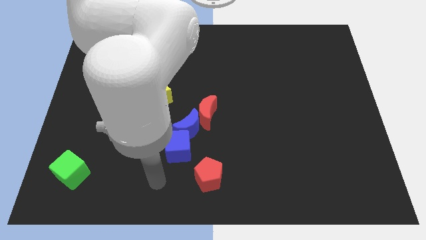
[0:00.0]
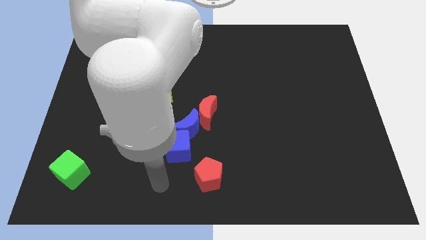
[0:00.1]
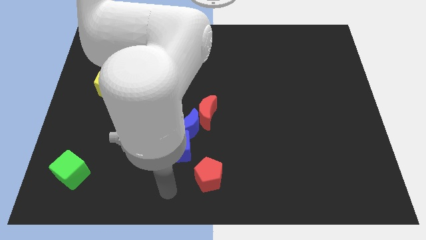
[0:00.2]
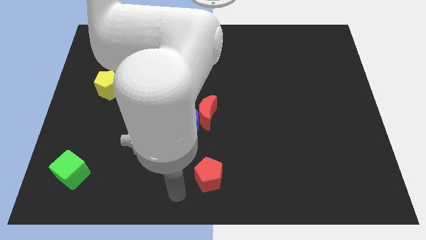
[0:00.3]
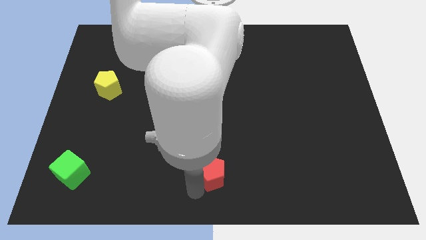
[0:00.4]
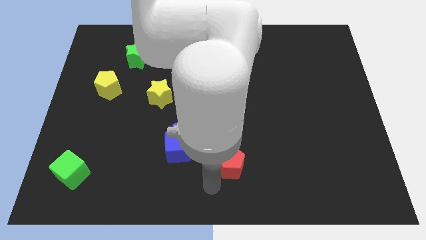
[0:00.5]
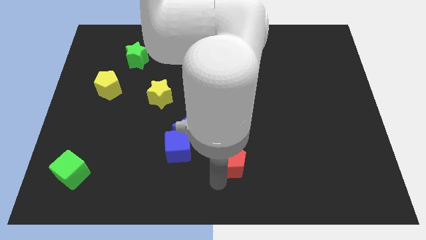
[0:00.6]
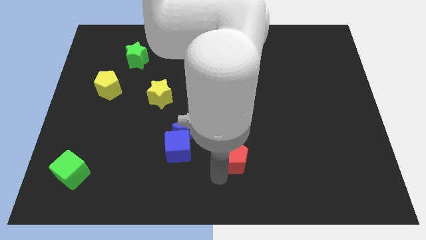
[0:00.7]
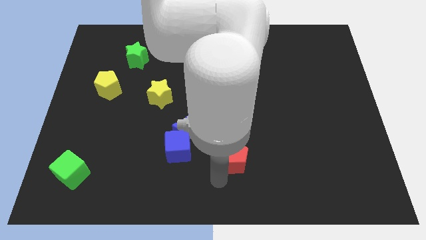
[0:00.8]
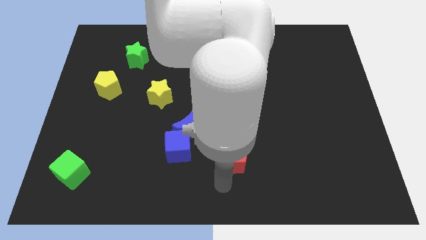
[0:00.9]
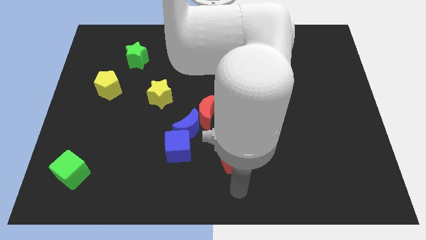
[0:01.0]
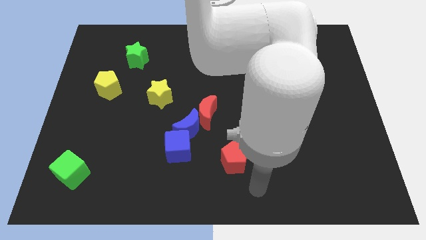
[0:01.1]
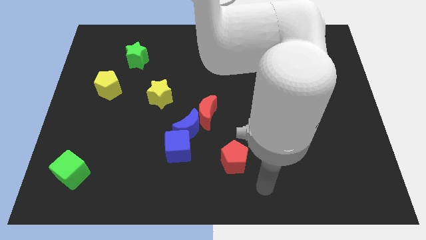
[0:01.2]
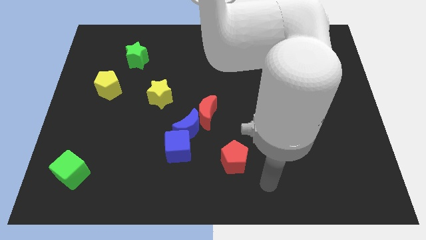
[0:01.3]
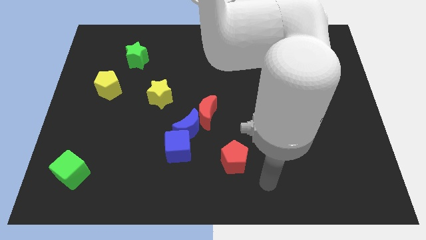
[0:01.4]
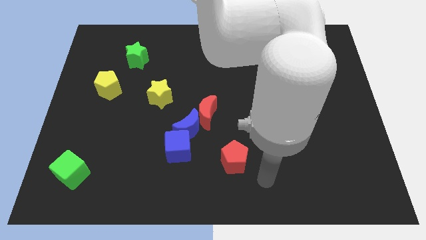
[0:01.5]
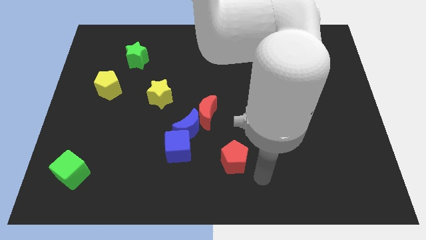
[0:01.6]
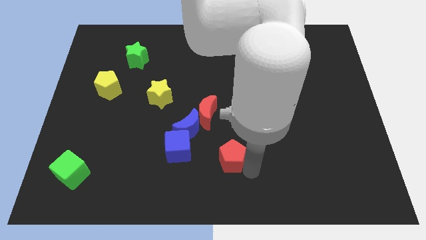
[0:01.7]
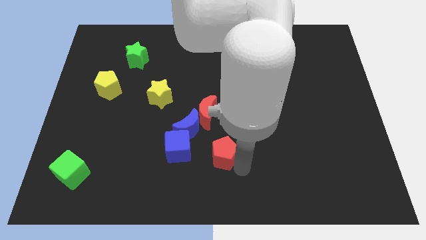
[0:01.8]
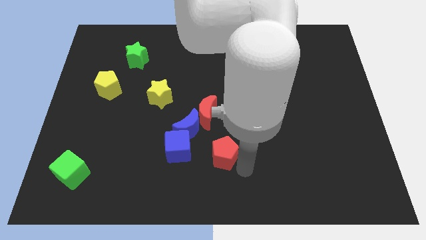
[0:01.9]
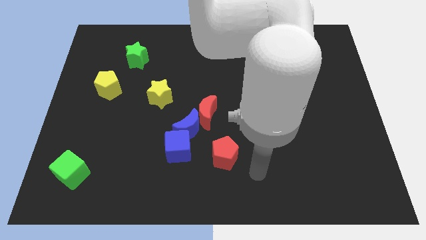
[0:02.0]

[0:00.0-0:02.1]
place the red pentagon to the right of the blue cube

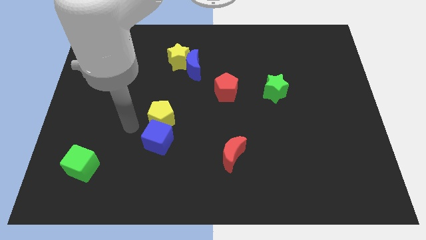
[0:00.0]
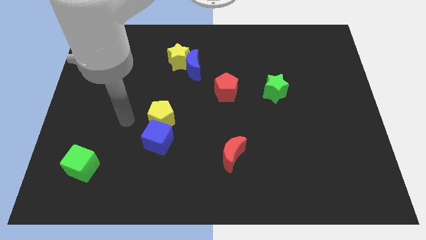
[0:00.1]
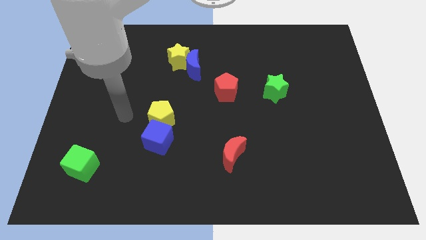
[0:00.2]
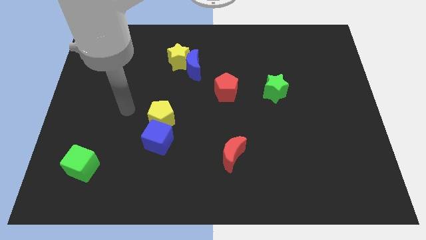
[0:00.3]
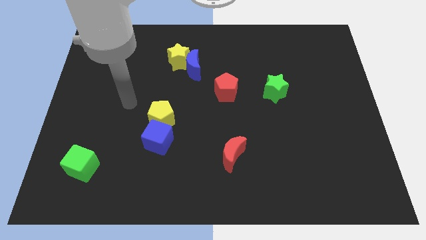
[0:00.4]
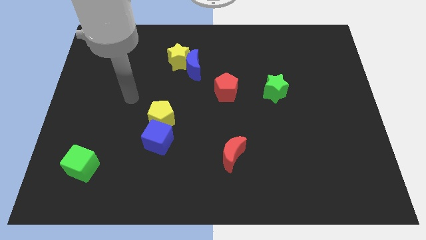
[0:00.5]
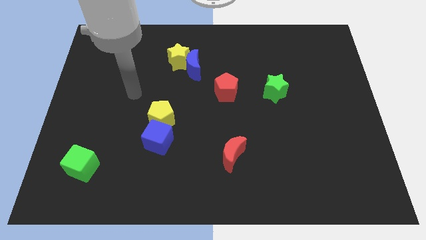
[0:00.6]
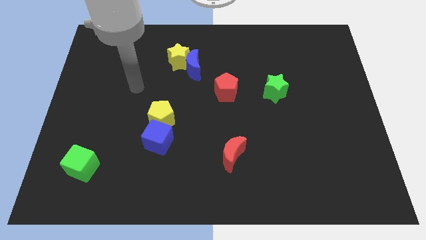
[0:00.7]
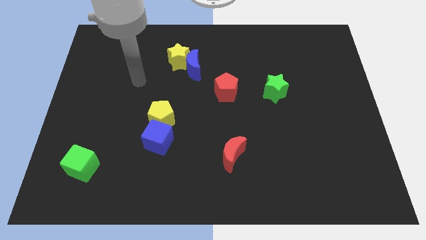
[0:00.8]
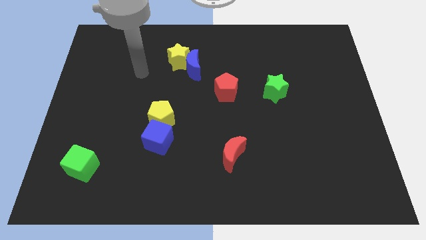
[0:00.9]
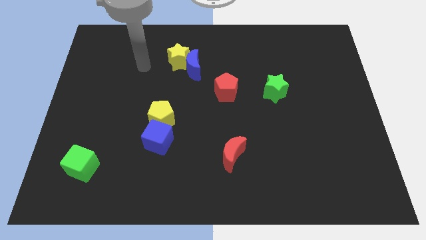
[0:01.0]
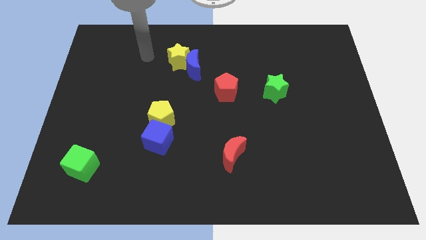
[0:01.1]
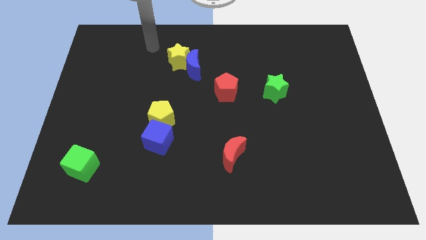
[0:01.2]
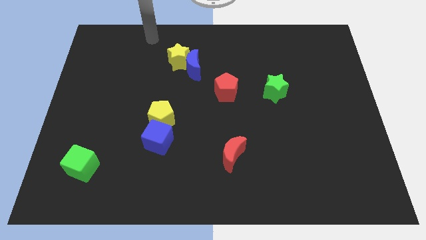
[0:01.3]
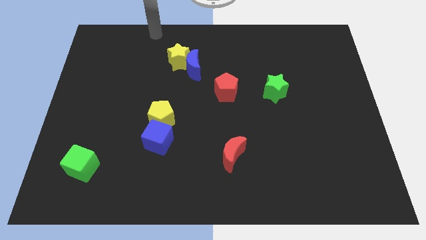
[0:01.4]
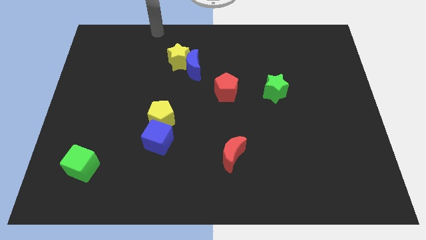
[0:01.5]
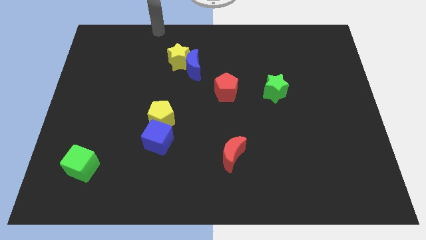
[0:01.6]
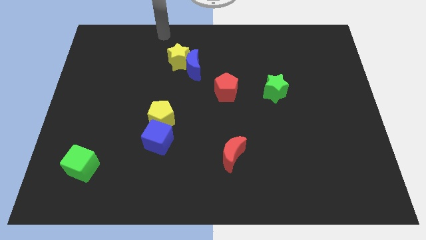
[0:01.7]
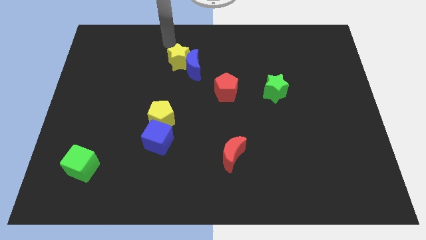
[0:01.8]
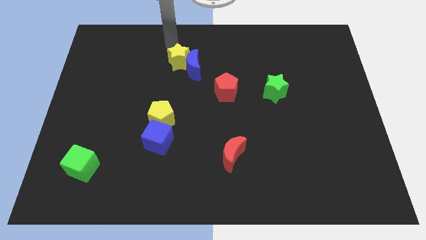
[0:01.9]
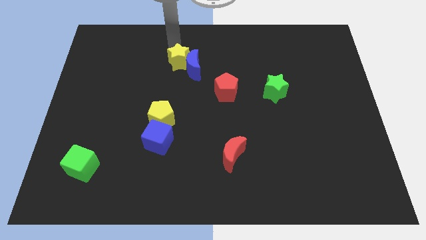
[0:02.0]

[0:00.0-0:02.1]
move your arm towards the top of the yellow star

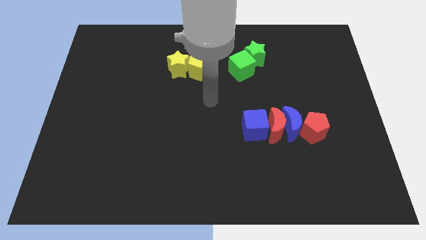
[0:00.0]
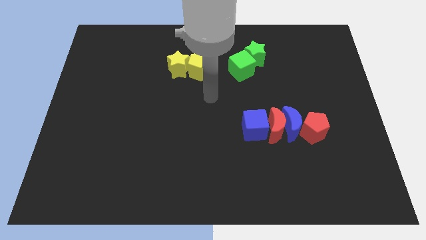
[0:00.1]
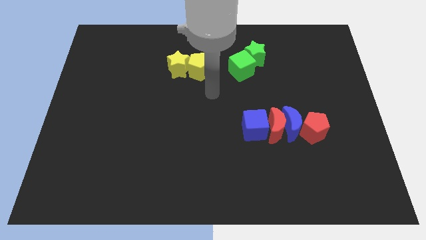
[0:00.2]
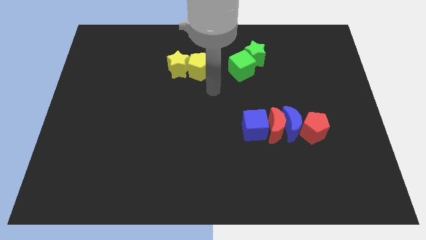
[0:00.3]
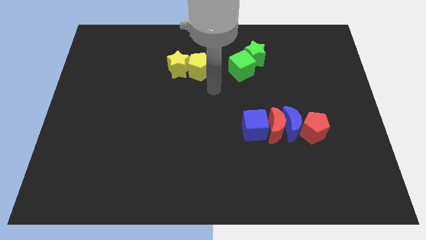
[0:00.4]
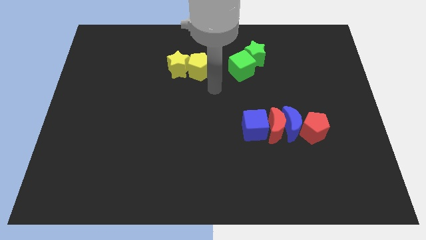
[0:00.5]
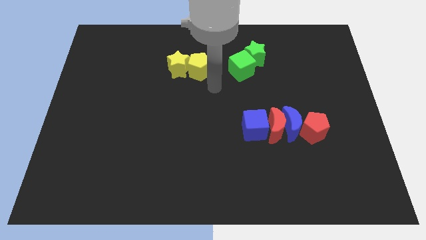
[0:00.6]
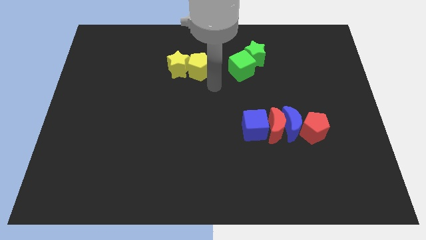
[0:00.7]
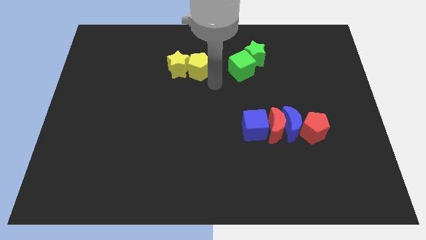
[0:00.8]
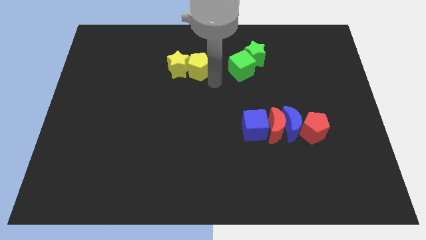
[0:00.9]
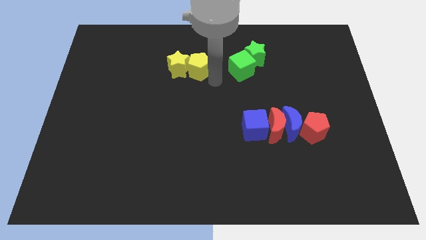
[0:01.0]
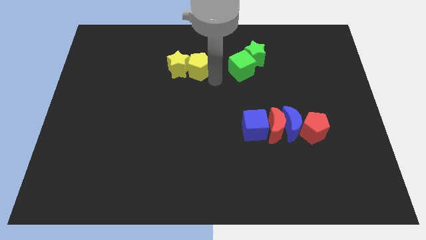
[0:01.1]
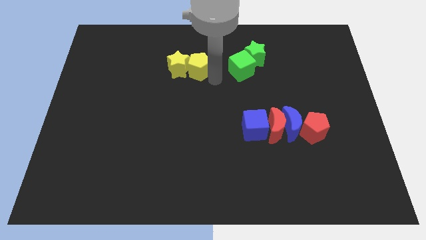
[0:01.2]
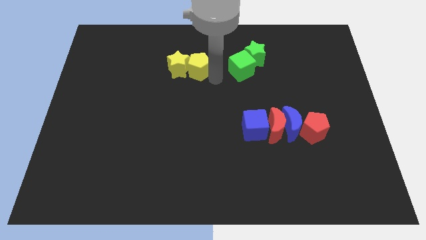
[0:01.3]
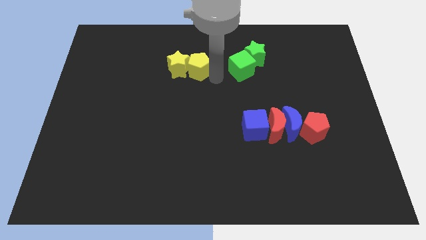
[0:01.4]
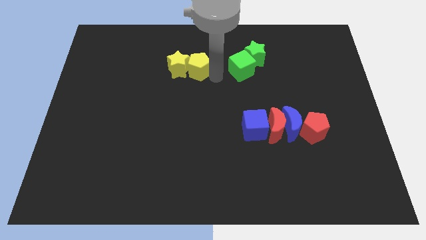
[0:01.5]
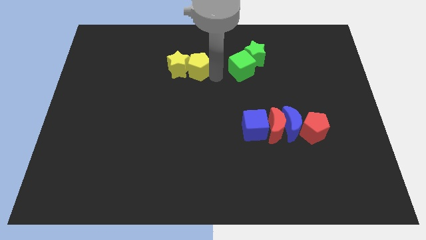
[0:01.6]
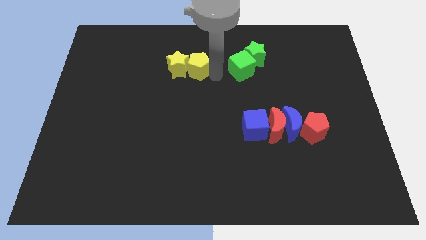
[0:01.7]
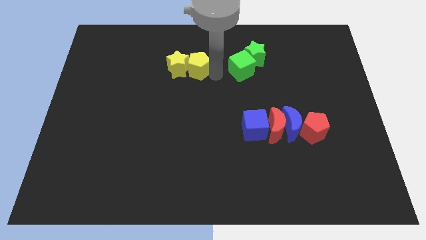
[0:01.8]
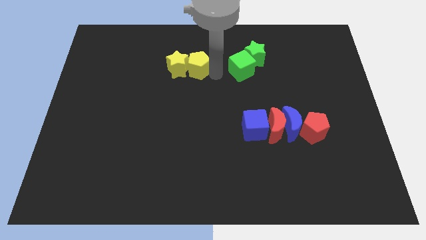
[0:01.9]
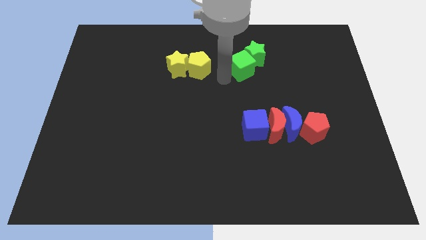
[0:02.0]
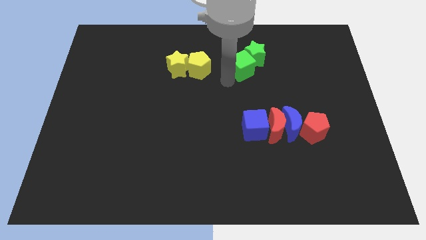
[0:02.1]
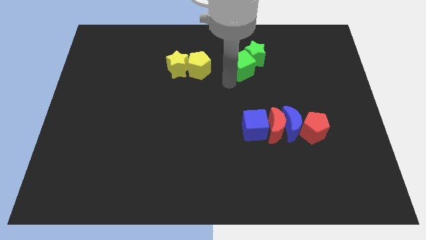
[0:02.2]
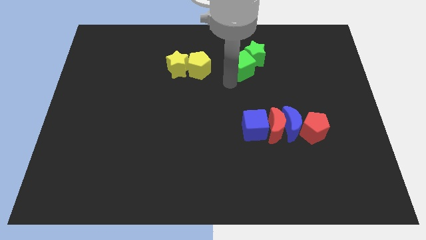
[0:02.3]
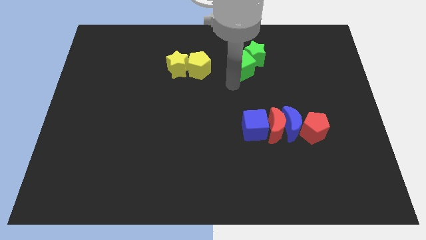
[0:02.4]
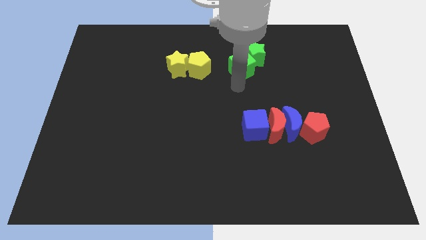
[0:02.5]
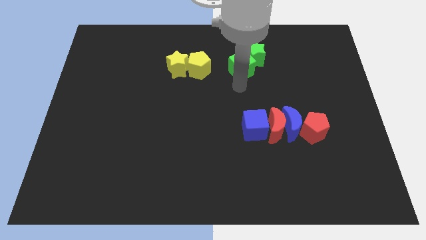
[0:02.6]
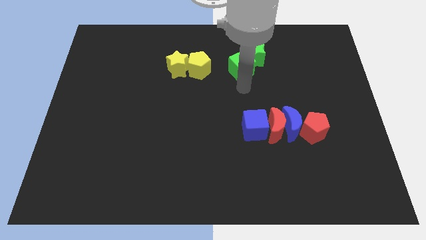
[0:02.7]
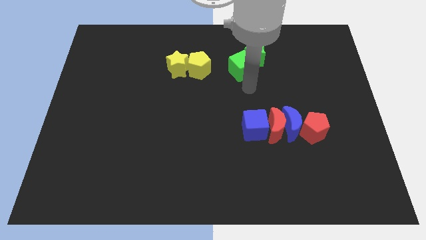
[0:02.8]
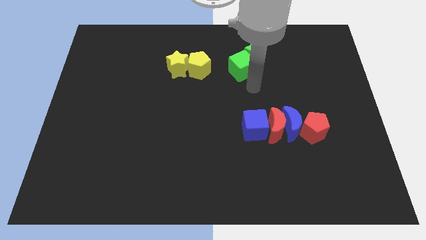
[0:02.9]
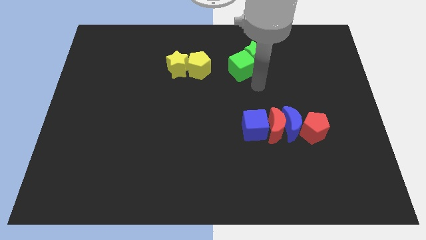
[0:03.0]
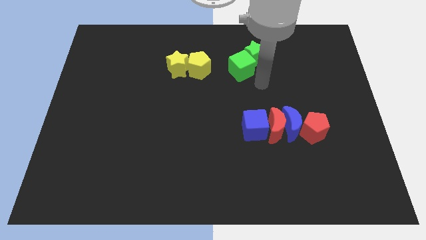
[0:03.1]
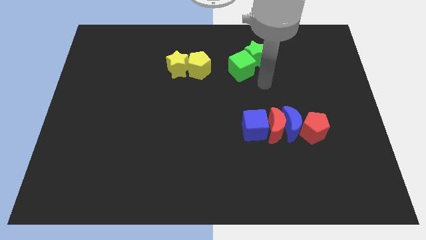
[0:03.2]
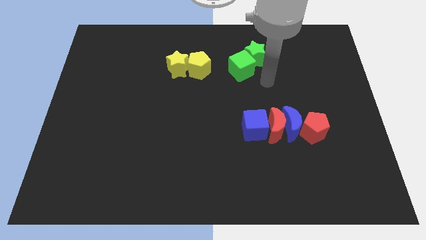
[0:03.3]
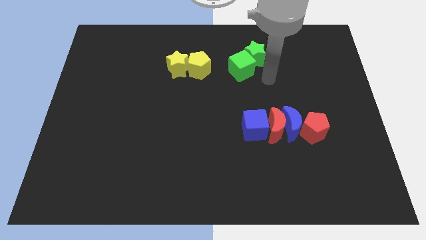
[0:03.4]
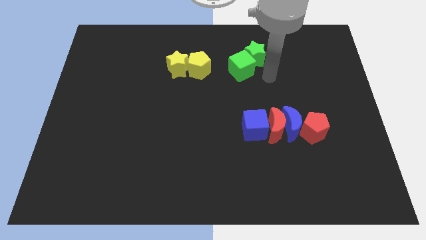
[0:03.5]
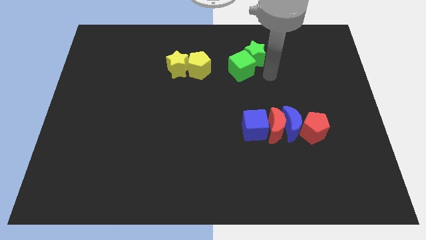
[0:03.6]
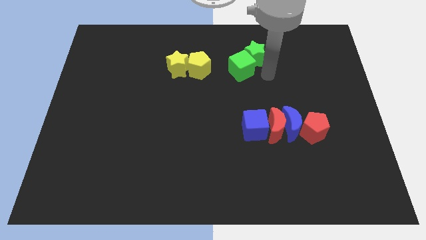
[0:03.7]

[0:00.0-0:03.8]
move your arm towards the green star

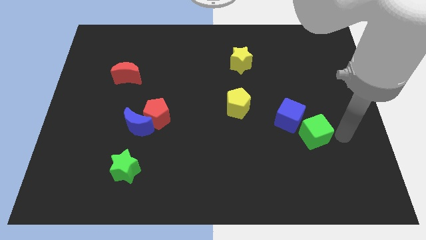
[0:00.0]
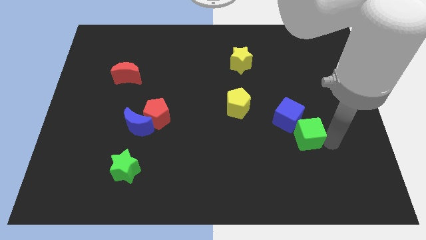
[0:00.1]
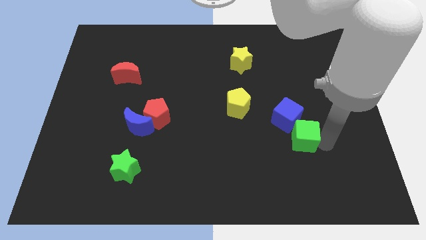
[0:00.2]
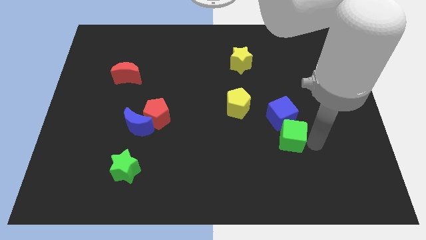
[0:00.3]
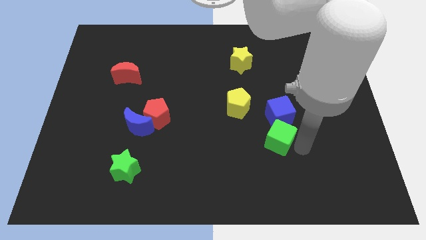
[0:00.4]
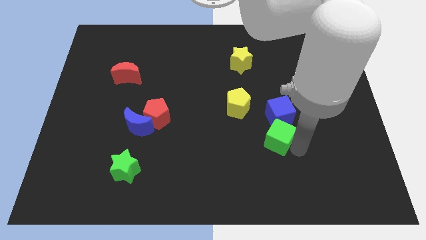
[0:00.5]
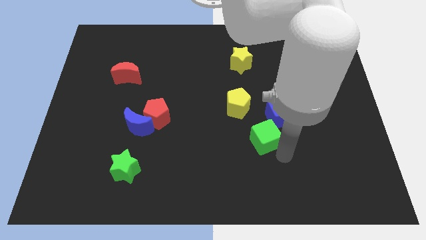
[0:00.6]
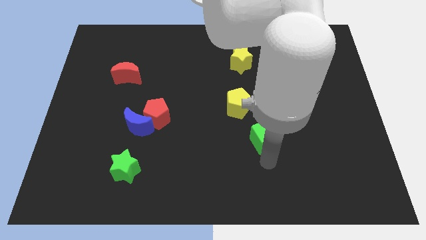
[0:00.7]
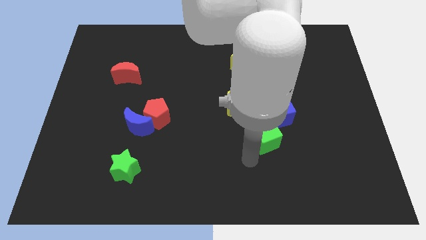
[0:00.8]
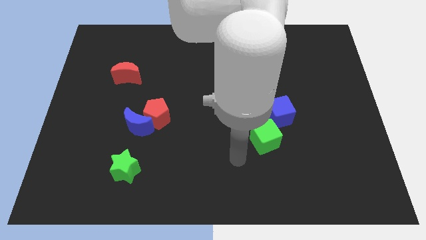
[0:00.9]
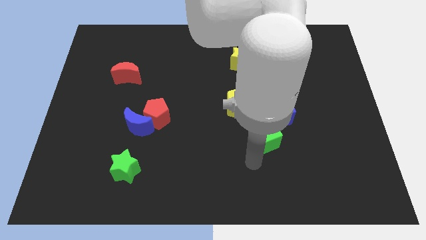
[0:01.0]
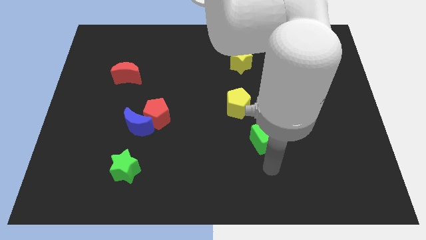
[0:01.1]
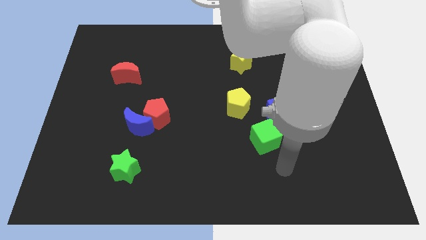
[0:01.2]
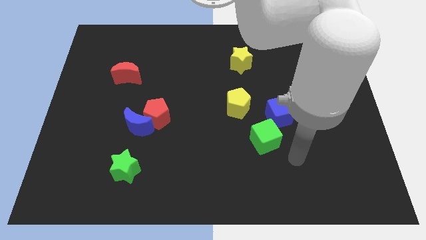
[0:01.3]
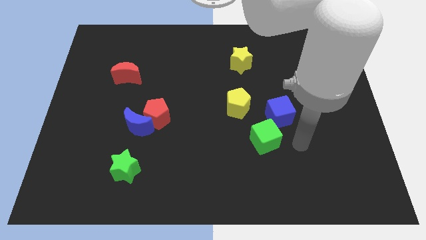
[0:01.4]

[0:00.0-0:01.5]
move the green cube slightly to the left
